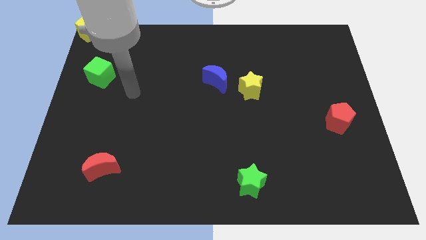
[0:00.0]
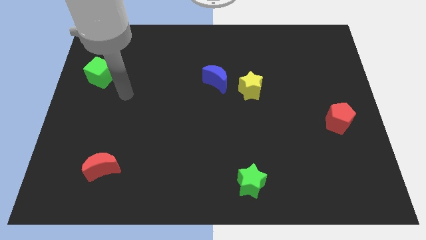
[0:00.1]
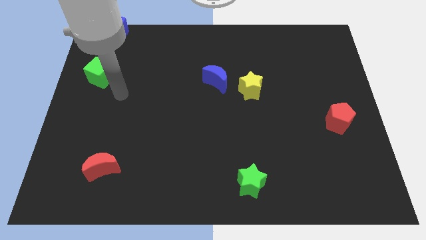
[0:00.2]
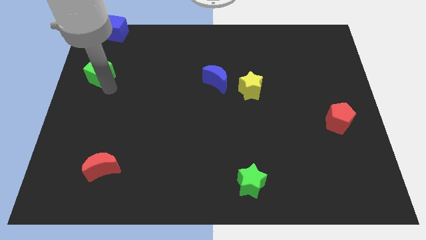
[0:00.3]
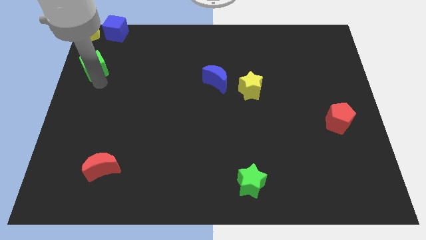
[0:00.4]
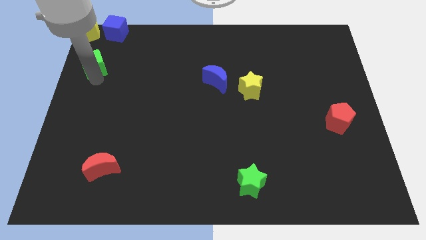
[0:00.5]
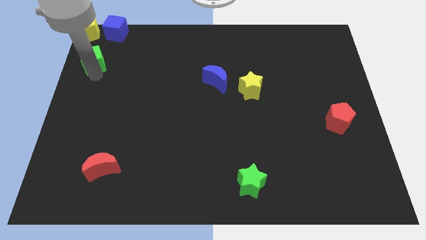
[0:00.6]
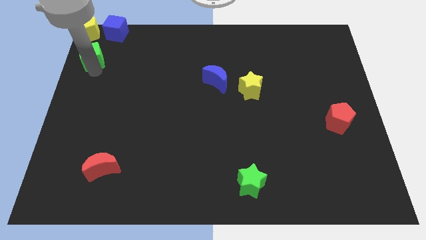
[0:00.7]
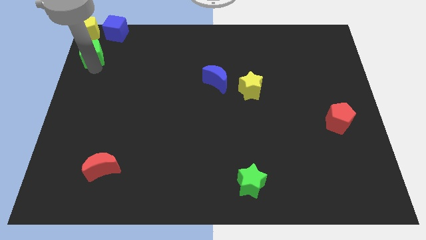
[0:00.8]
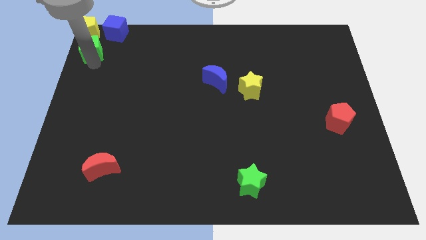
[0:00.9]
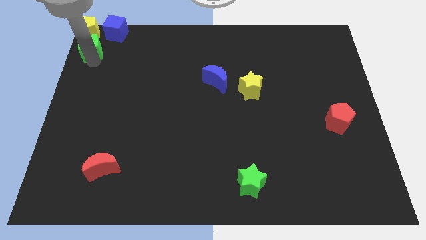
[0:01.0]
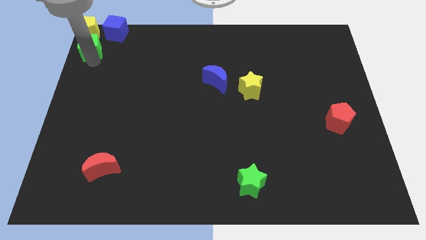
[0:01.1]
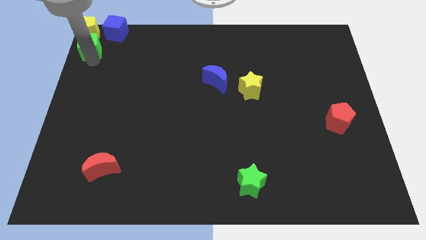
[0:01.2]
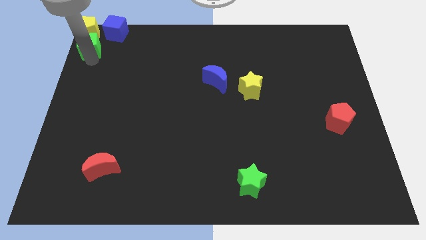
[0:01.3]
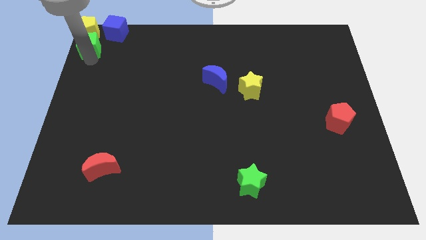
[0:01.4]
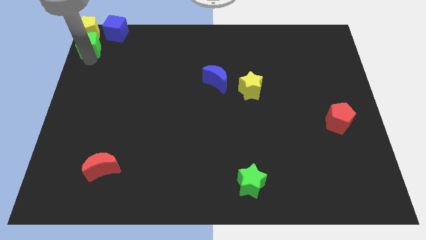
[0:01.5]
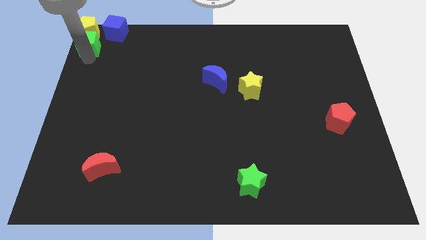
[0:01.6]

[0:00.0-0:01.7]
push the green cube into the yellow pentagon

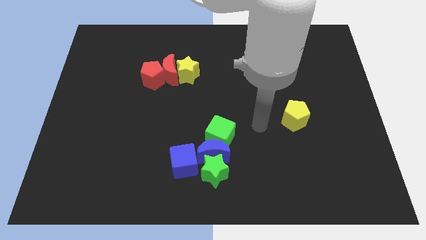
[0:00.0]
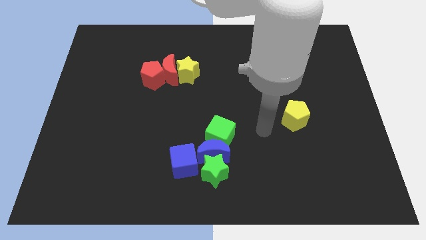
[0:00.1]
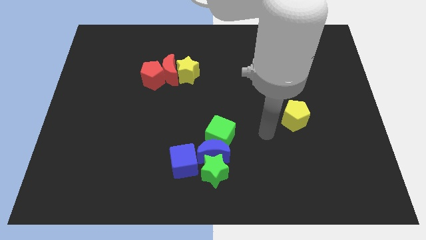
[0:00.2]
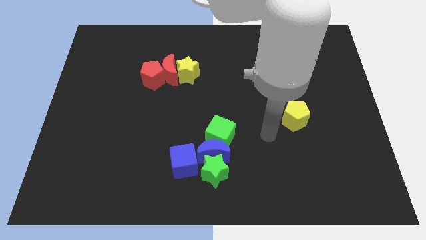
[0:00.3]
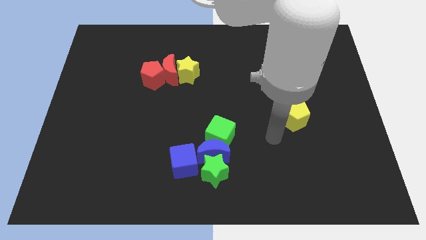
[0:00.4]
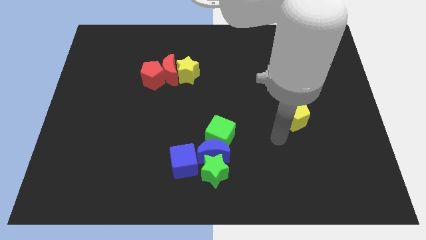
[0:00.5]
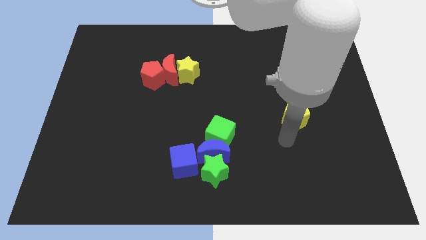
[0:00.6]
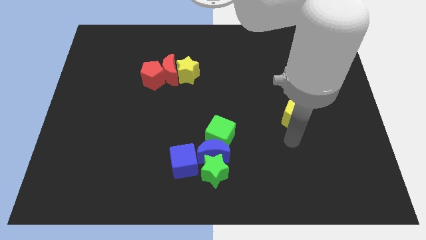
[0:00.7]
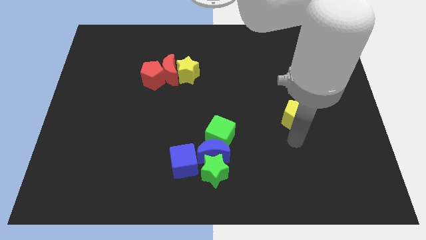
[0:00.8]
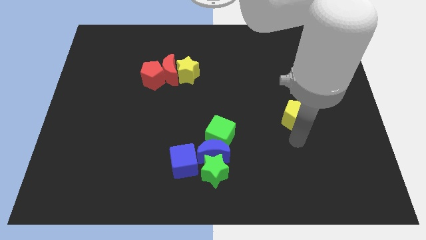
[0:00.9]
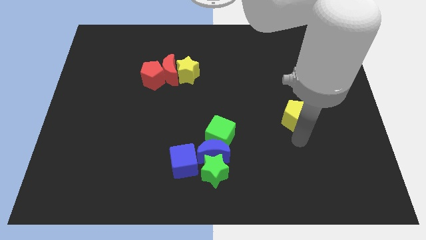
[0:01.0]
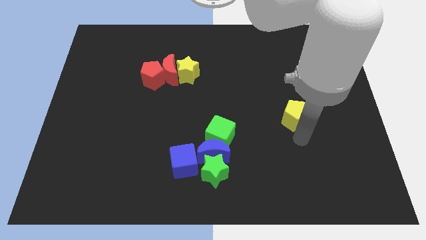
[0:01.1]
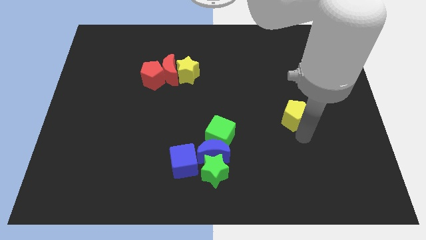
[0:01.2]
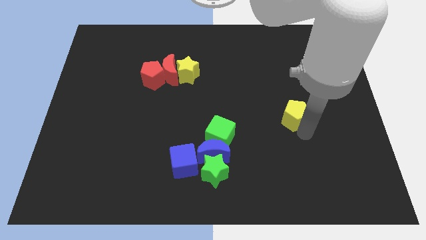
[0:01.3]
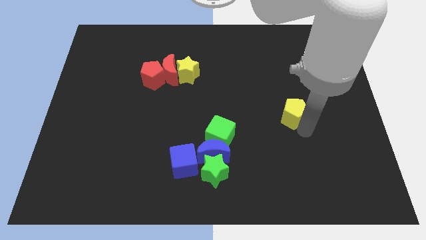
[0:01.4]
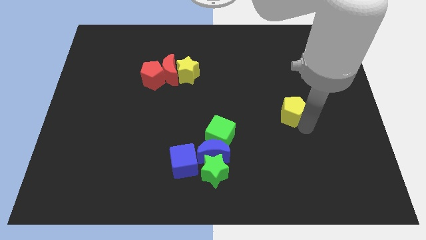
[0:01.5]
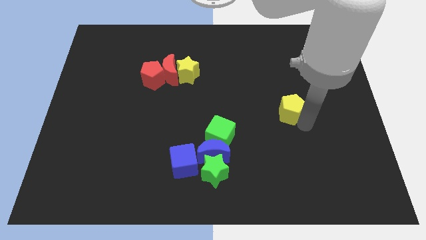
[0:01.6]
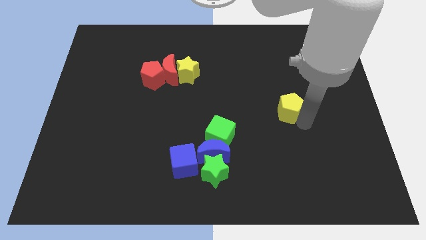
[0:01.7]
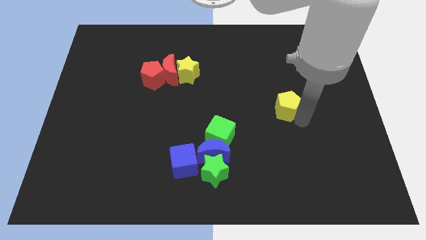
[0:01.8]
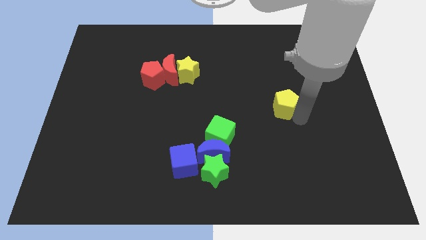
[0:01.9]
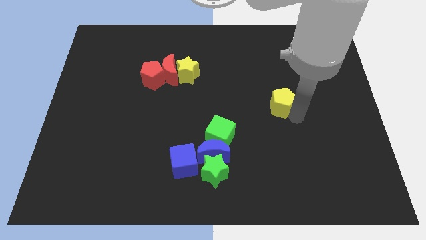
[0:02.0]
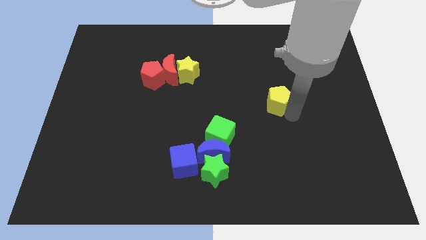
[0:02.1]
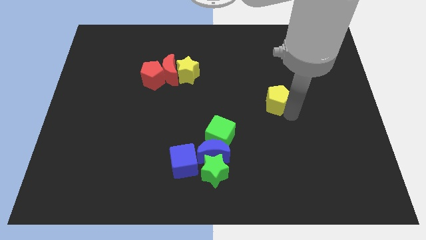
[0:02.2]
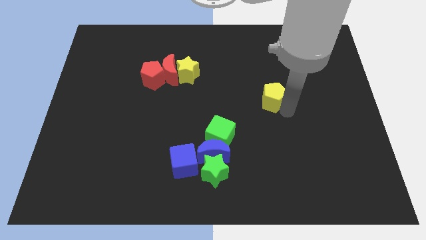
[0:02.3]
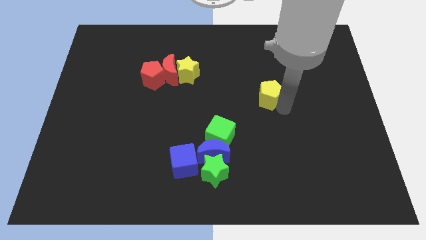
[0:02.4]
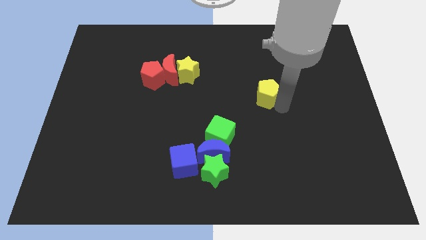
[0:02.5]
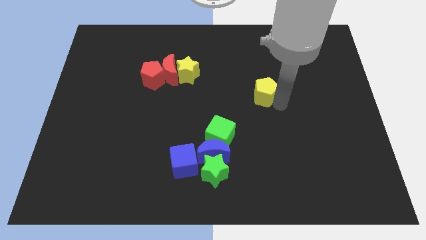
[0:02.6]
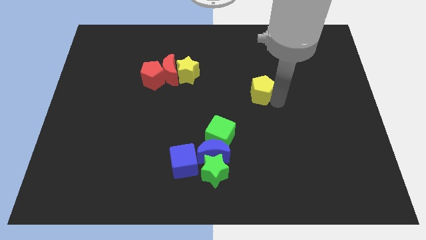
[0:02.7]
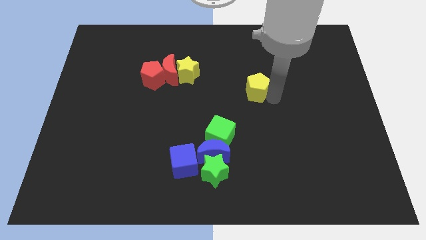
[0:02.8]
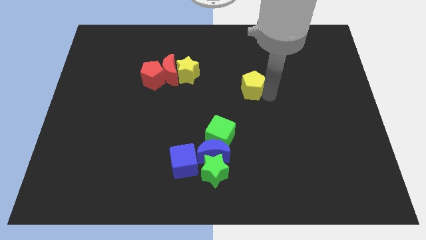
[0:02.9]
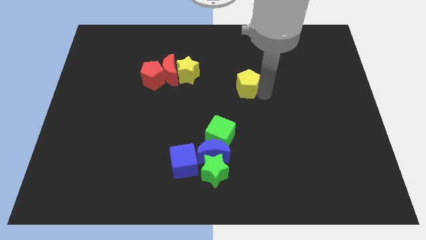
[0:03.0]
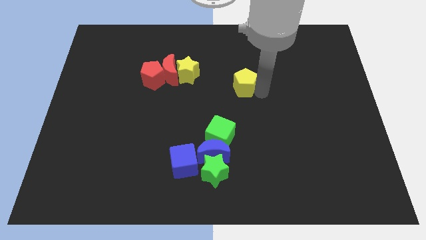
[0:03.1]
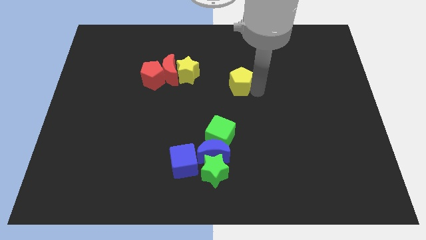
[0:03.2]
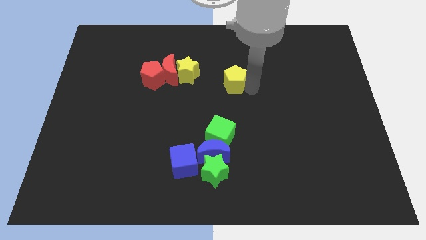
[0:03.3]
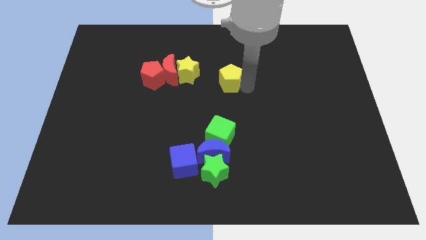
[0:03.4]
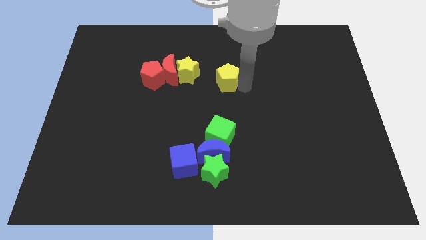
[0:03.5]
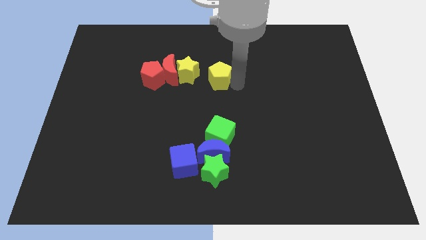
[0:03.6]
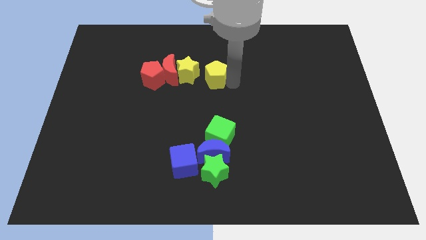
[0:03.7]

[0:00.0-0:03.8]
move the yellow pentagon right to the yellow star

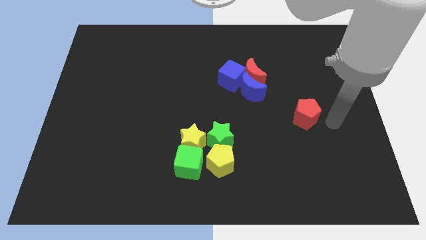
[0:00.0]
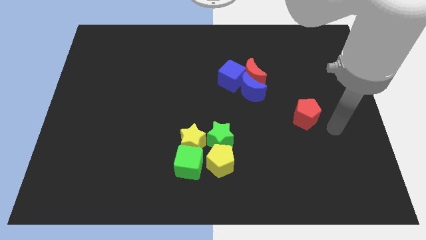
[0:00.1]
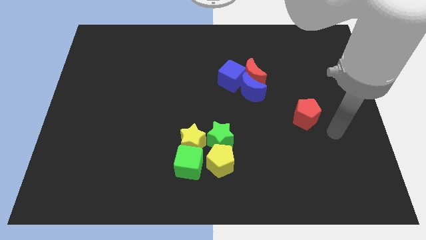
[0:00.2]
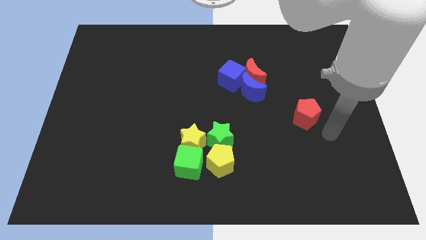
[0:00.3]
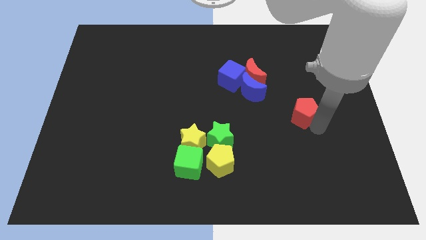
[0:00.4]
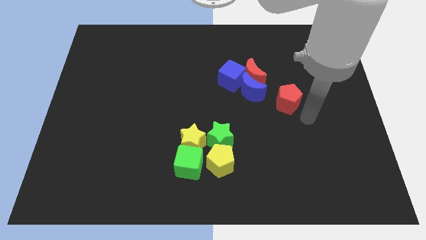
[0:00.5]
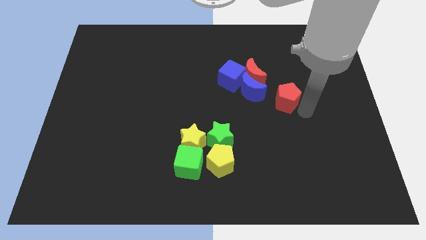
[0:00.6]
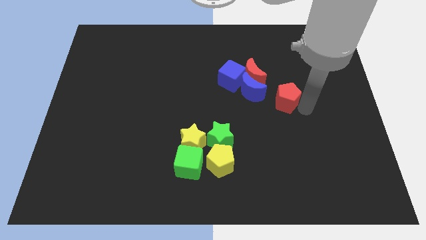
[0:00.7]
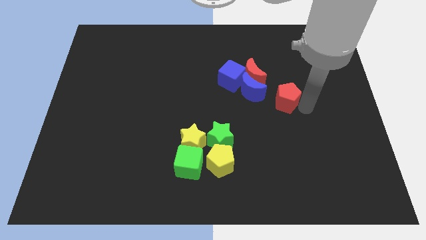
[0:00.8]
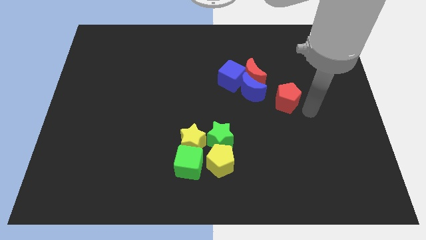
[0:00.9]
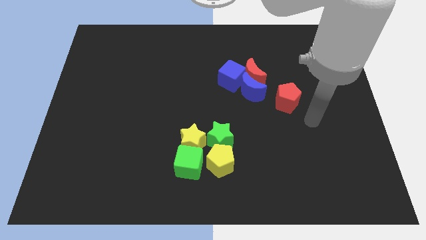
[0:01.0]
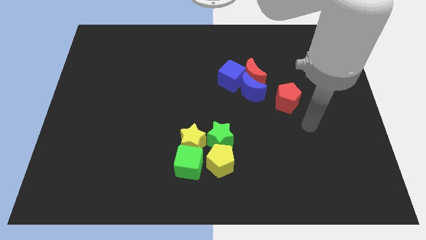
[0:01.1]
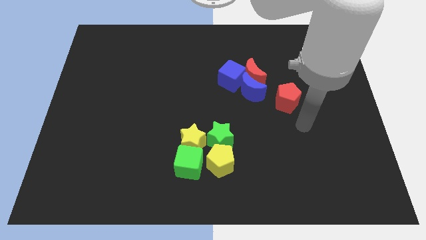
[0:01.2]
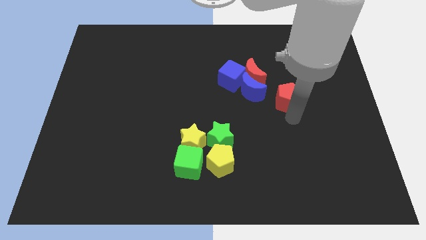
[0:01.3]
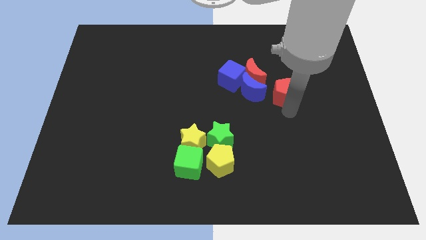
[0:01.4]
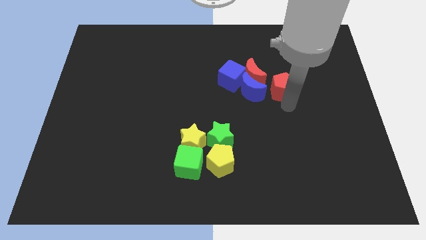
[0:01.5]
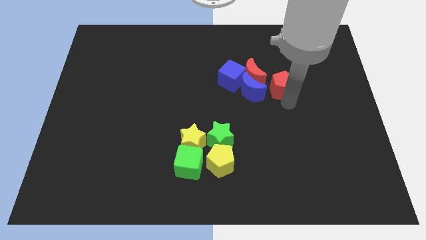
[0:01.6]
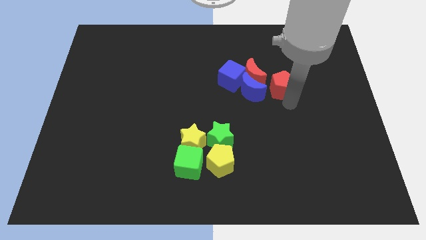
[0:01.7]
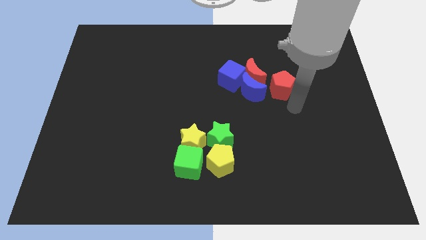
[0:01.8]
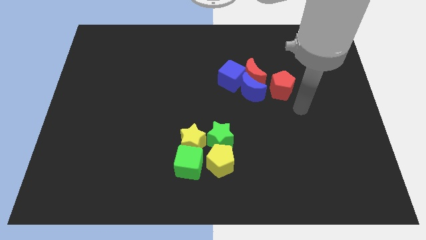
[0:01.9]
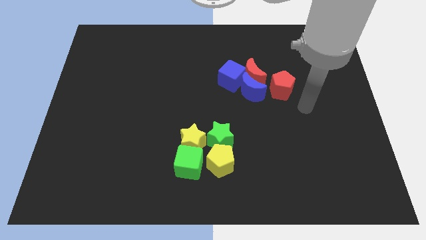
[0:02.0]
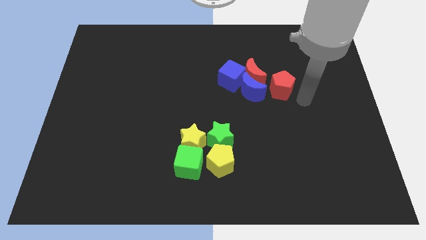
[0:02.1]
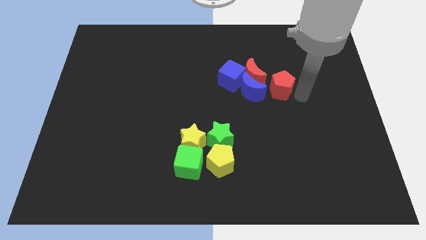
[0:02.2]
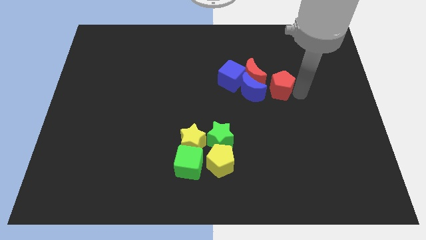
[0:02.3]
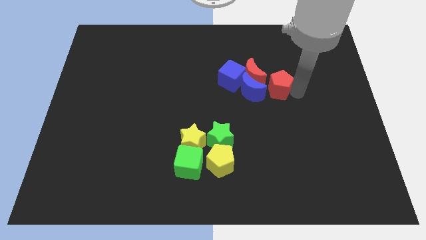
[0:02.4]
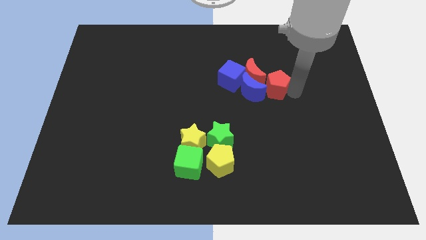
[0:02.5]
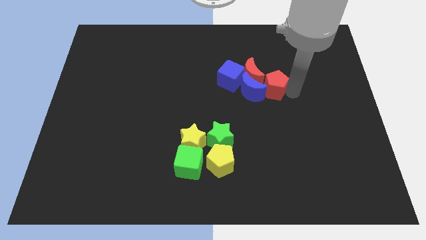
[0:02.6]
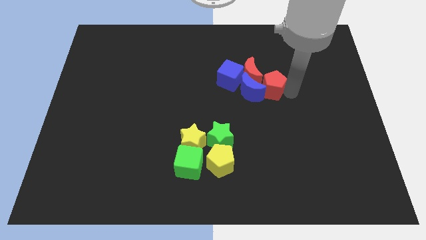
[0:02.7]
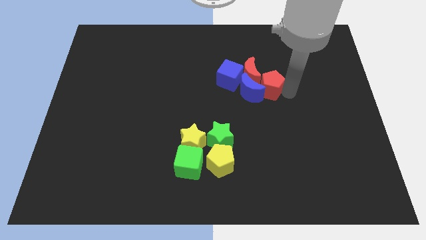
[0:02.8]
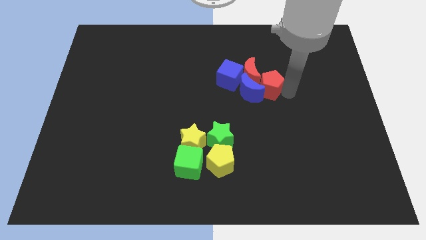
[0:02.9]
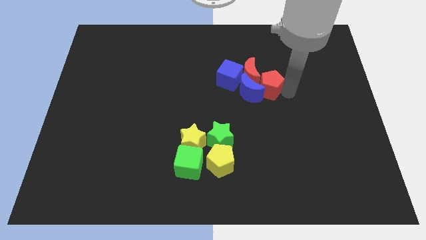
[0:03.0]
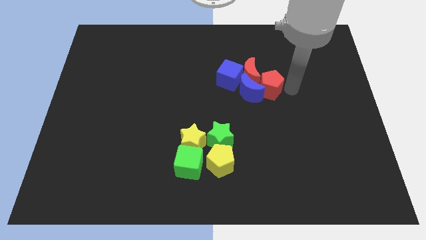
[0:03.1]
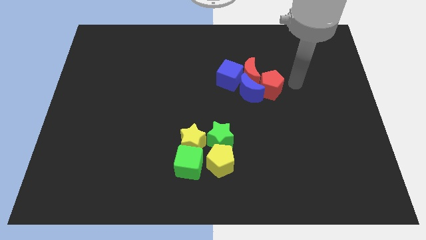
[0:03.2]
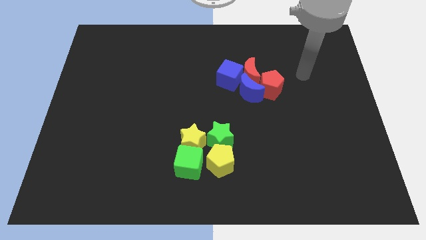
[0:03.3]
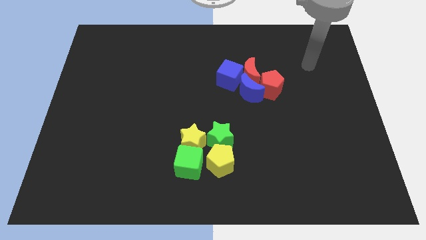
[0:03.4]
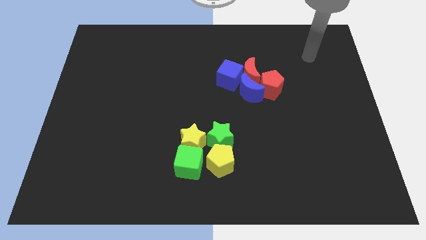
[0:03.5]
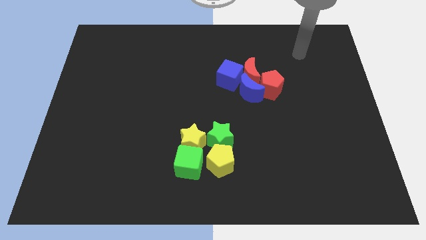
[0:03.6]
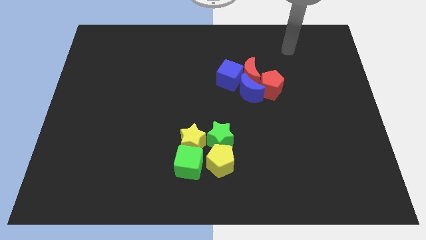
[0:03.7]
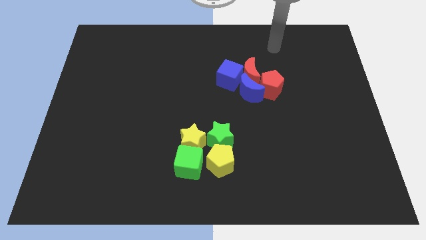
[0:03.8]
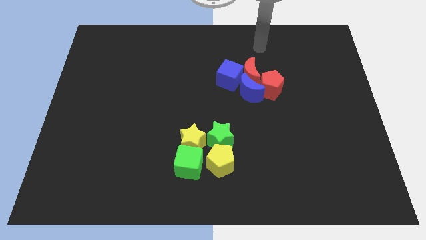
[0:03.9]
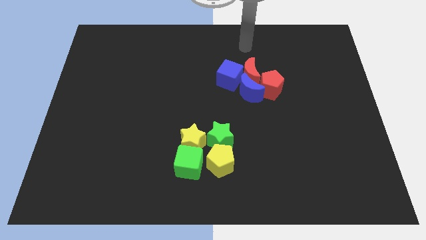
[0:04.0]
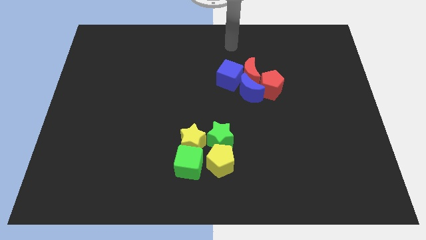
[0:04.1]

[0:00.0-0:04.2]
push the red pentagon to the right of the red moon and blue moon
